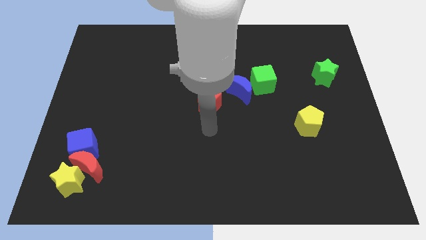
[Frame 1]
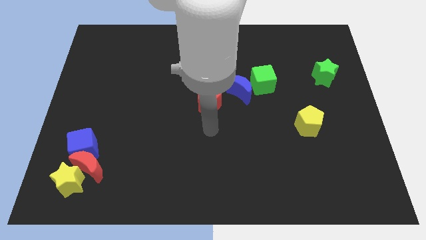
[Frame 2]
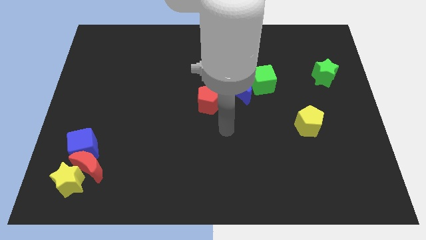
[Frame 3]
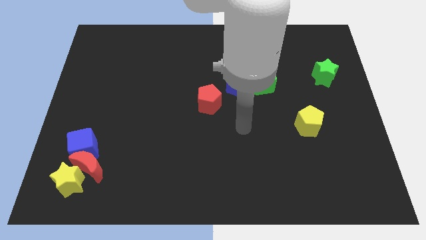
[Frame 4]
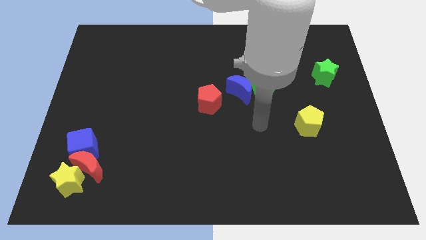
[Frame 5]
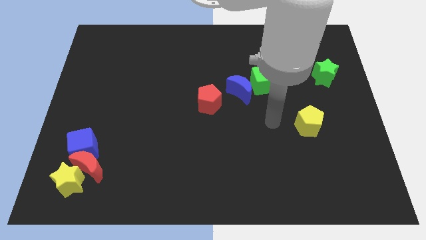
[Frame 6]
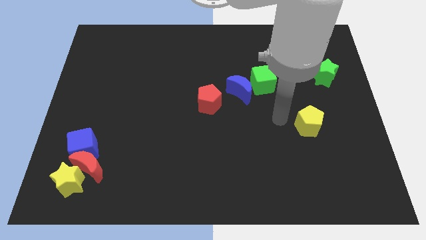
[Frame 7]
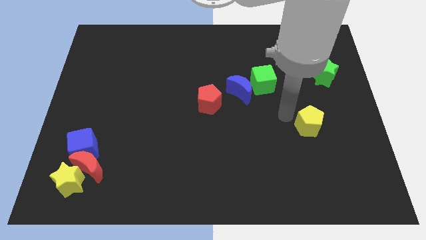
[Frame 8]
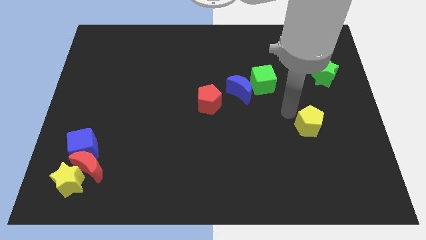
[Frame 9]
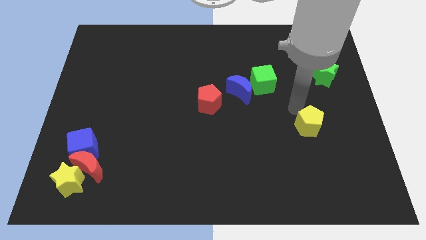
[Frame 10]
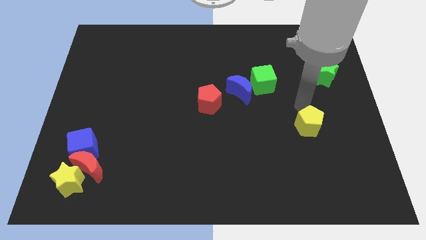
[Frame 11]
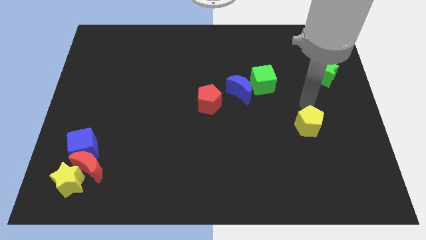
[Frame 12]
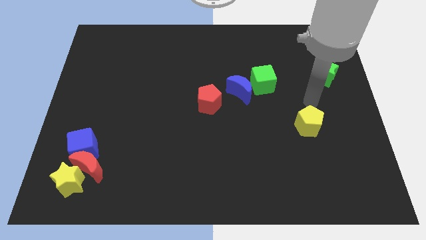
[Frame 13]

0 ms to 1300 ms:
point your arm at the top of the yellow pentagon

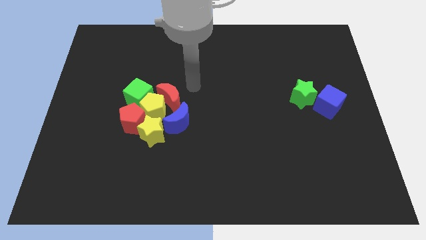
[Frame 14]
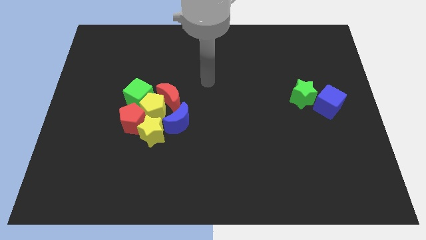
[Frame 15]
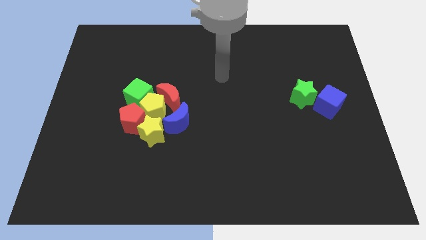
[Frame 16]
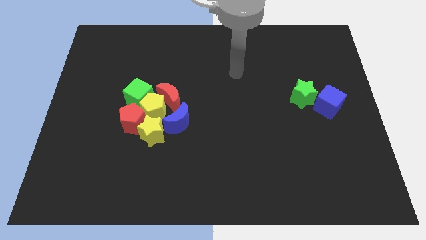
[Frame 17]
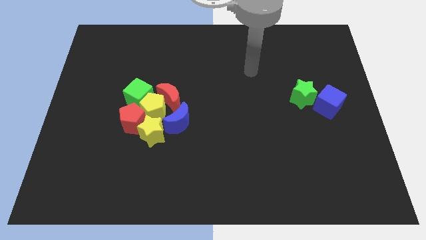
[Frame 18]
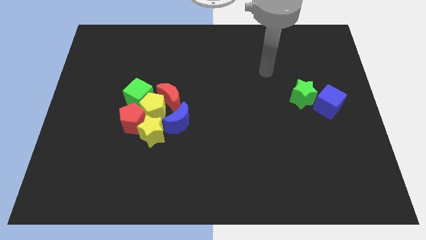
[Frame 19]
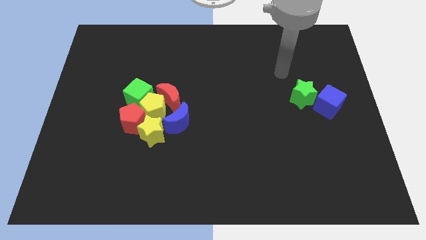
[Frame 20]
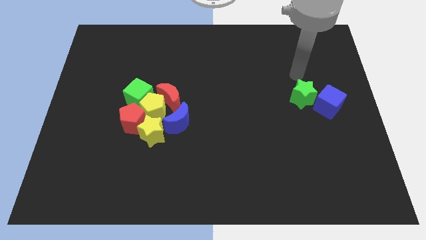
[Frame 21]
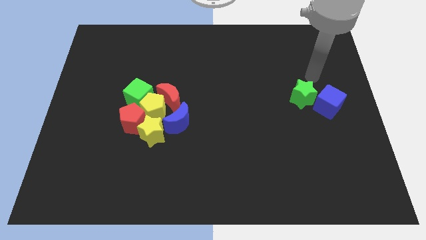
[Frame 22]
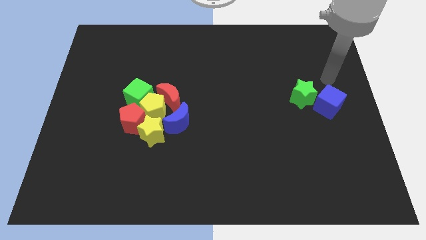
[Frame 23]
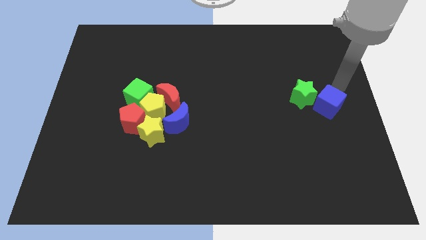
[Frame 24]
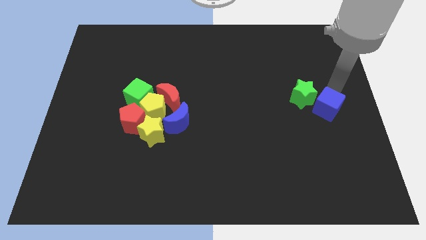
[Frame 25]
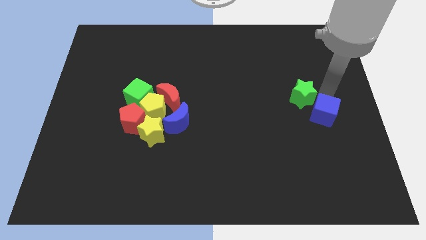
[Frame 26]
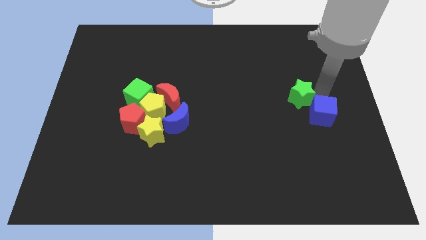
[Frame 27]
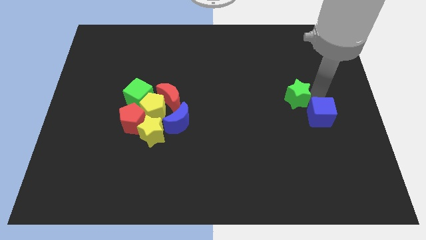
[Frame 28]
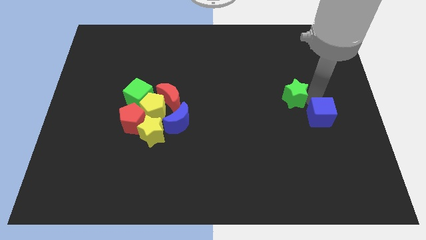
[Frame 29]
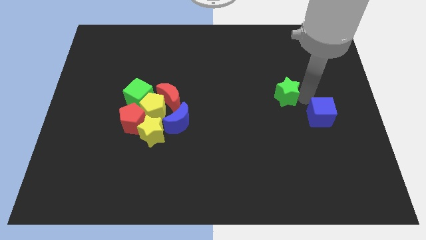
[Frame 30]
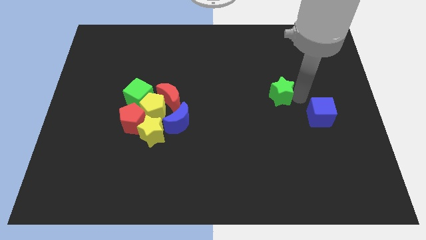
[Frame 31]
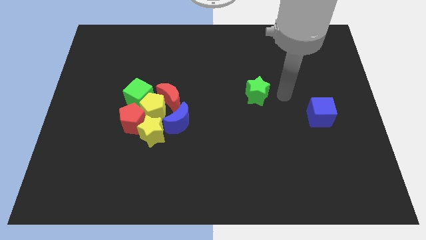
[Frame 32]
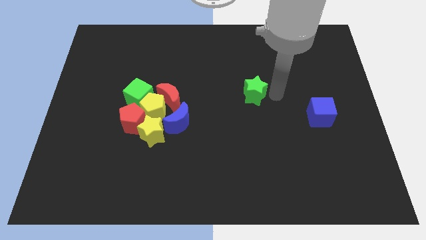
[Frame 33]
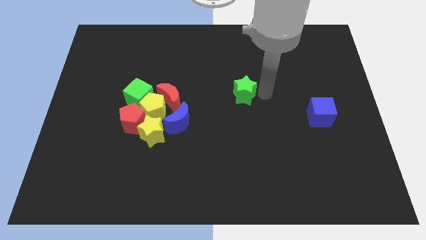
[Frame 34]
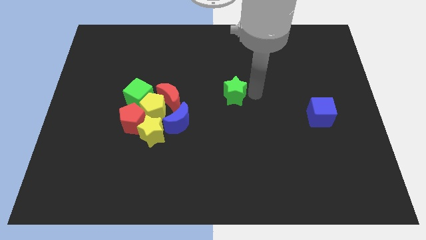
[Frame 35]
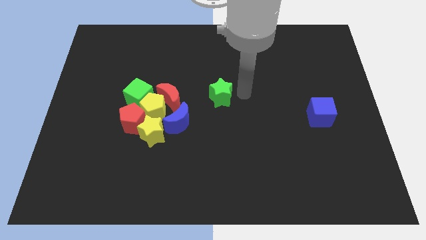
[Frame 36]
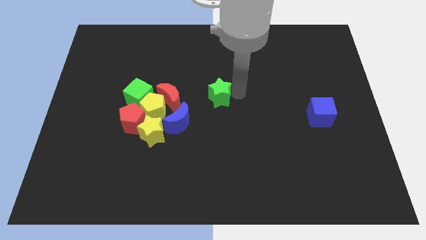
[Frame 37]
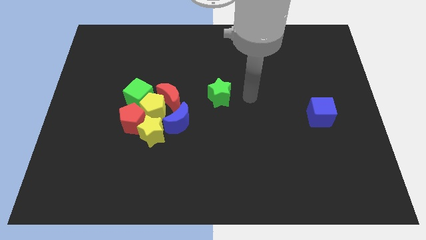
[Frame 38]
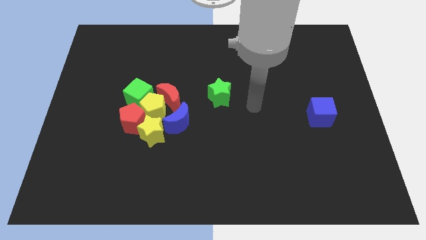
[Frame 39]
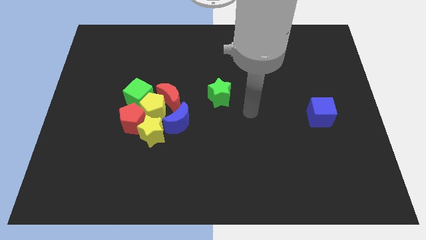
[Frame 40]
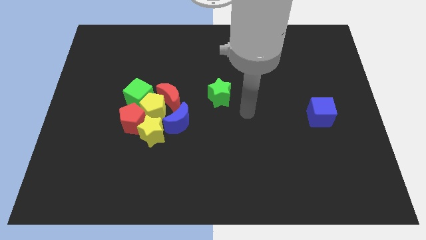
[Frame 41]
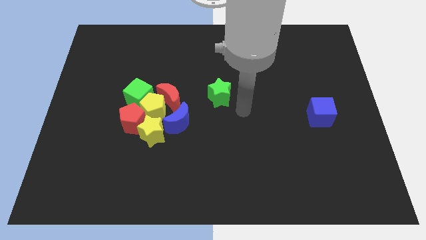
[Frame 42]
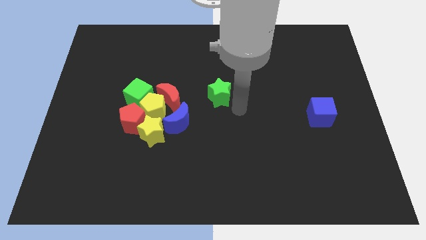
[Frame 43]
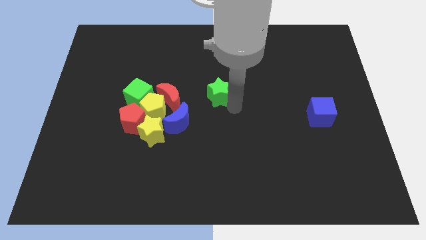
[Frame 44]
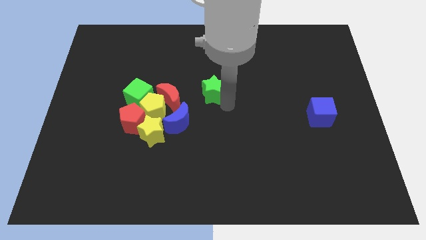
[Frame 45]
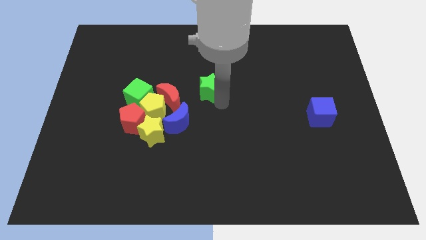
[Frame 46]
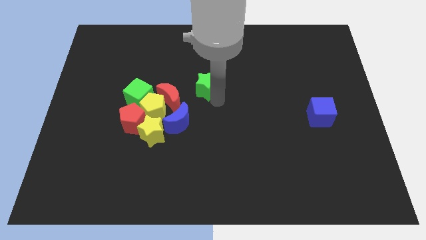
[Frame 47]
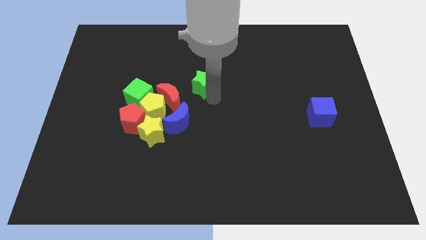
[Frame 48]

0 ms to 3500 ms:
separate the green star from the blue cube

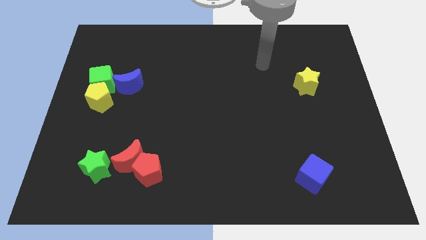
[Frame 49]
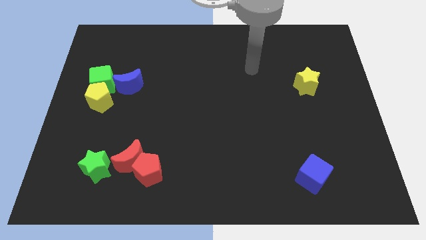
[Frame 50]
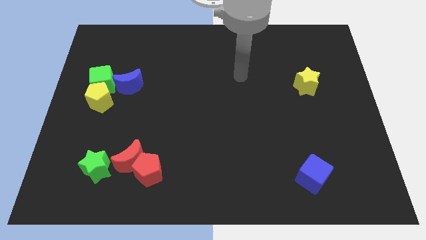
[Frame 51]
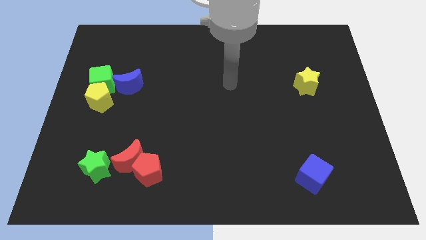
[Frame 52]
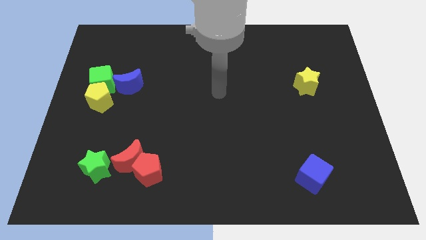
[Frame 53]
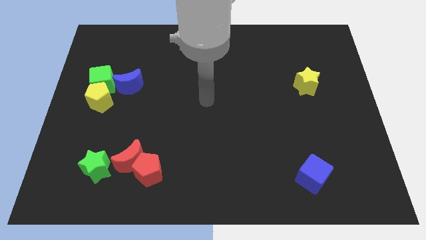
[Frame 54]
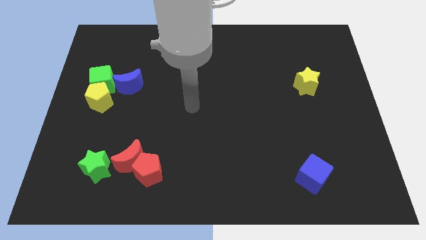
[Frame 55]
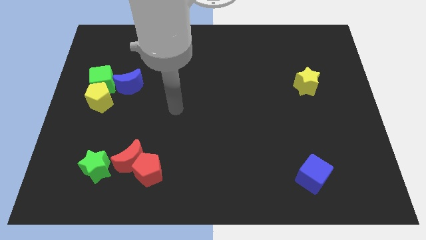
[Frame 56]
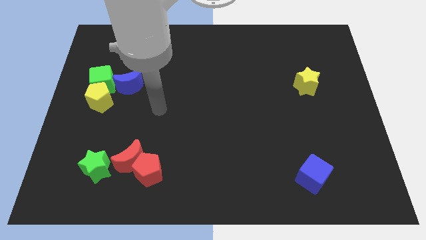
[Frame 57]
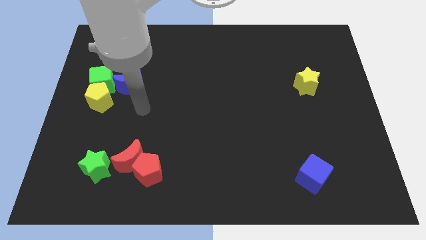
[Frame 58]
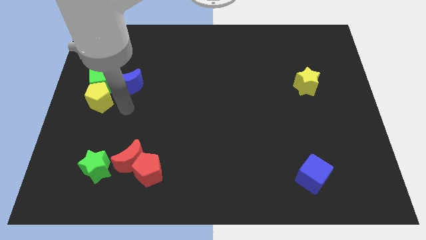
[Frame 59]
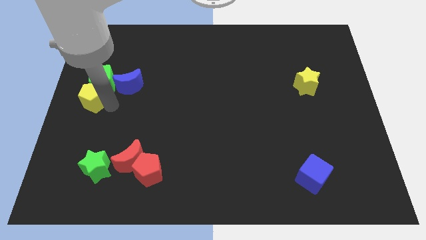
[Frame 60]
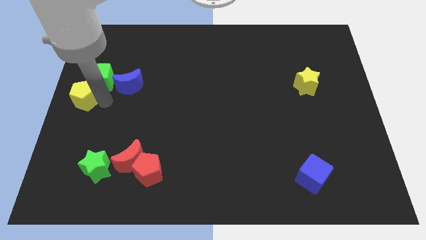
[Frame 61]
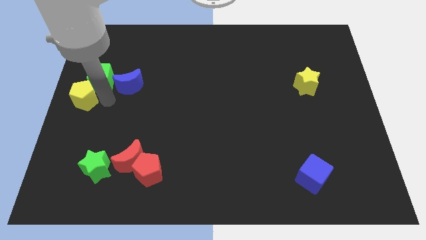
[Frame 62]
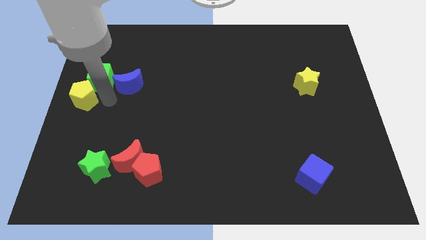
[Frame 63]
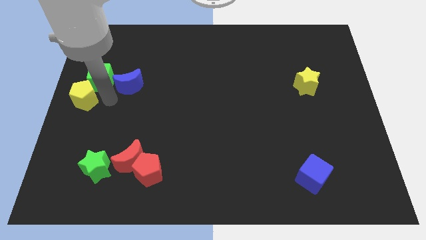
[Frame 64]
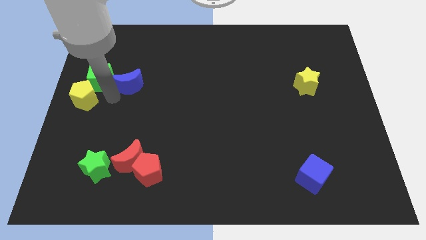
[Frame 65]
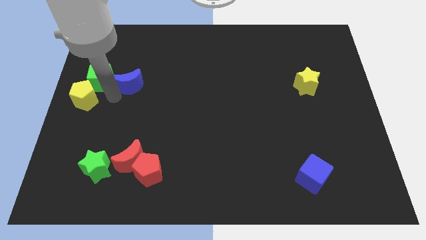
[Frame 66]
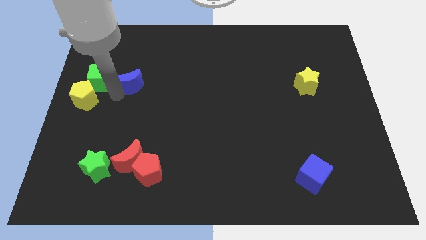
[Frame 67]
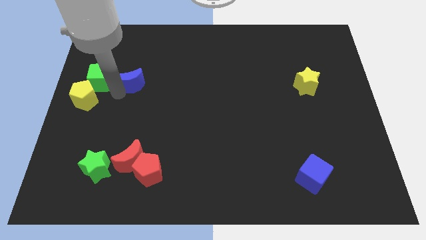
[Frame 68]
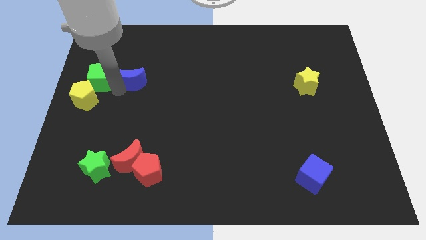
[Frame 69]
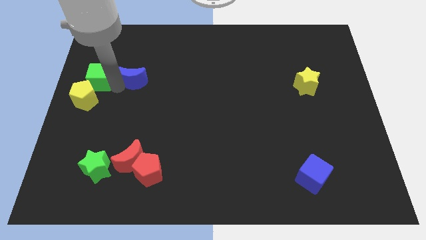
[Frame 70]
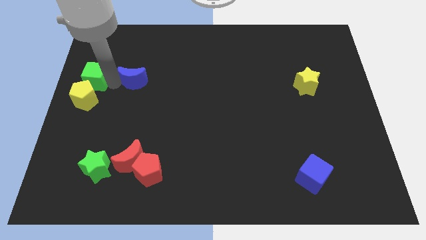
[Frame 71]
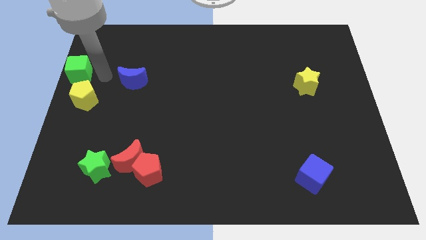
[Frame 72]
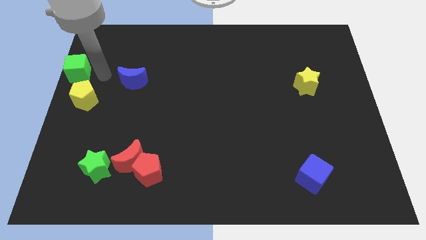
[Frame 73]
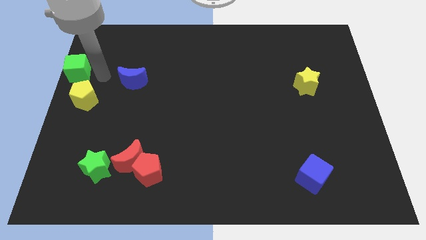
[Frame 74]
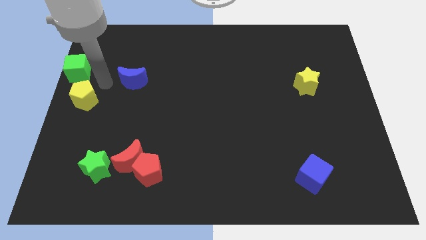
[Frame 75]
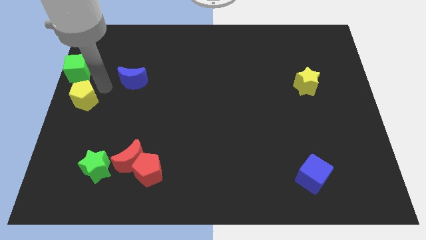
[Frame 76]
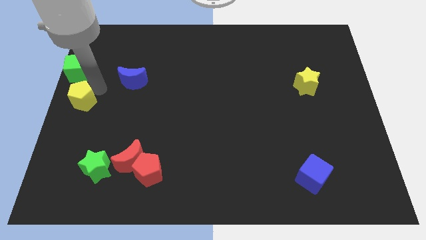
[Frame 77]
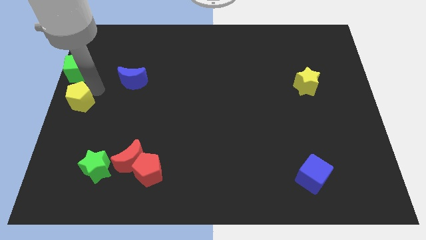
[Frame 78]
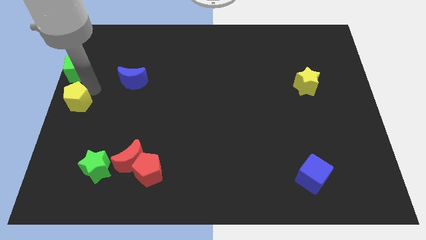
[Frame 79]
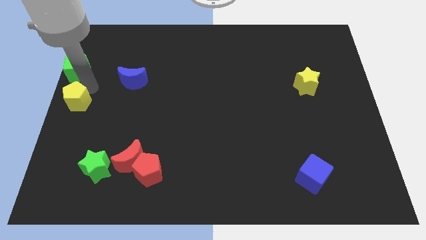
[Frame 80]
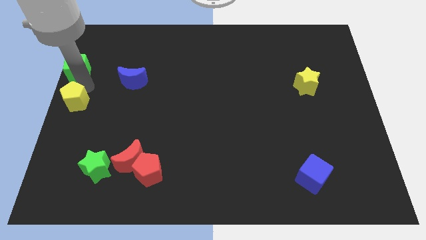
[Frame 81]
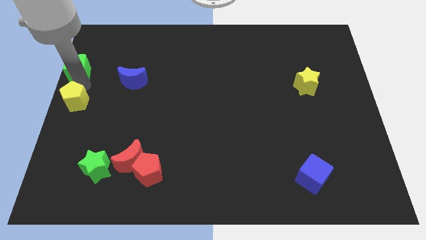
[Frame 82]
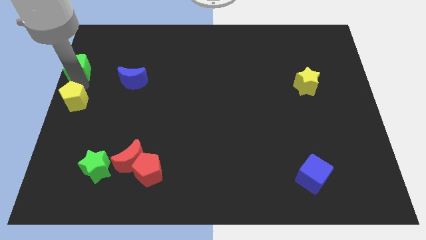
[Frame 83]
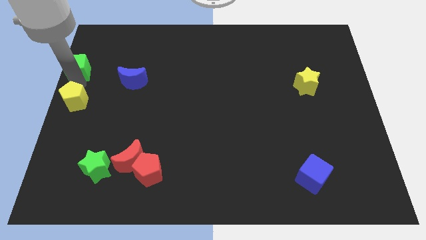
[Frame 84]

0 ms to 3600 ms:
place yellow pentagon below green cube

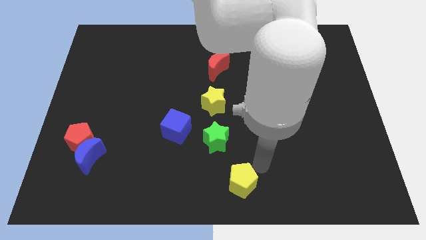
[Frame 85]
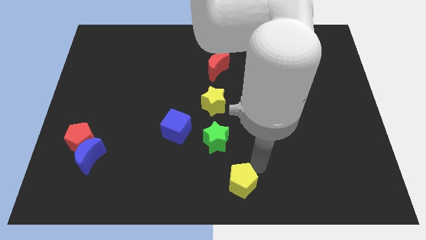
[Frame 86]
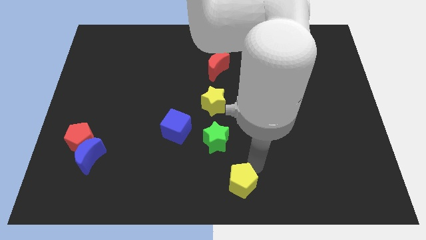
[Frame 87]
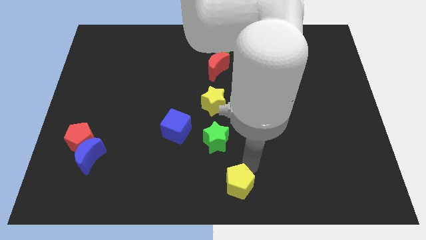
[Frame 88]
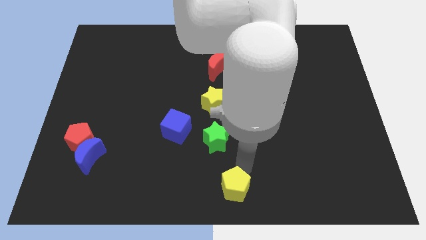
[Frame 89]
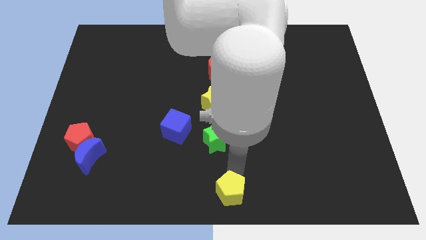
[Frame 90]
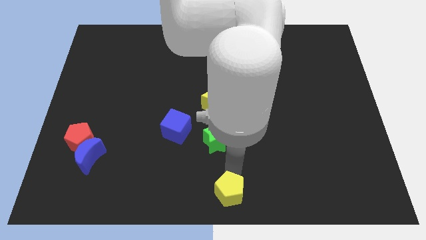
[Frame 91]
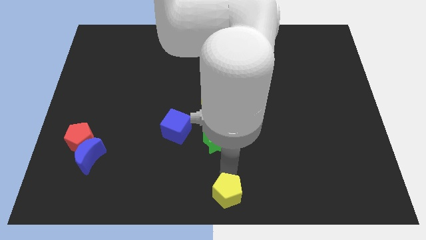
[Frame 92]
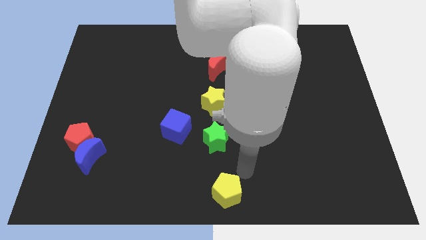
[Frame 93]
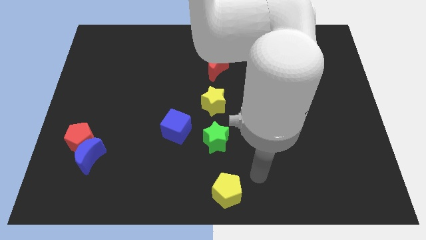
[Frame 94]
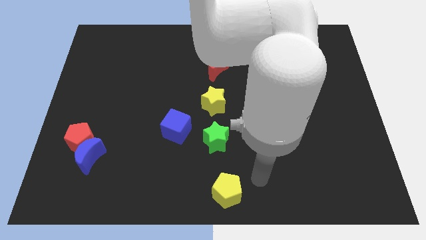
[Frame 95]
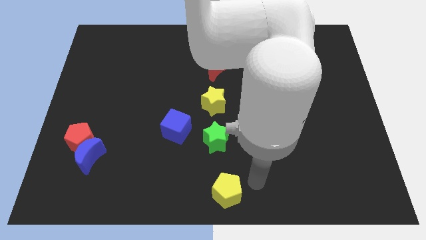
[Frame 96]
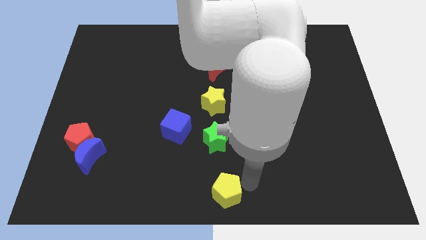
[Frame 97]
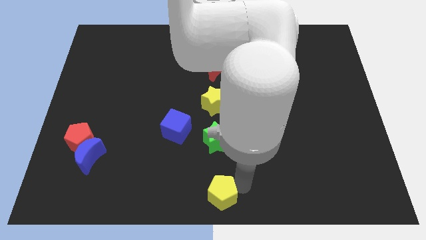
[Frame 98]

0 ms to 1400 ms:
place the yellow pentagon vertically below the green star
